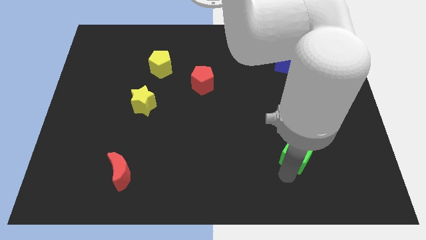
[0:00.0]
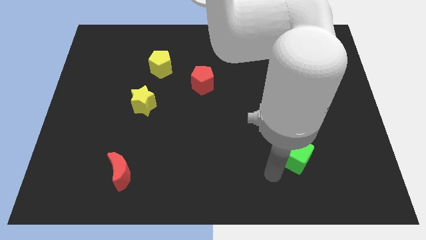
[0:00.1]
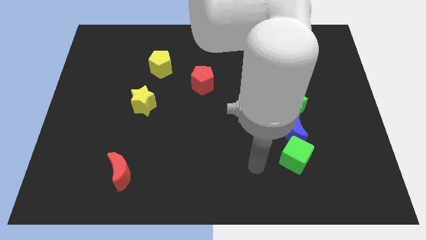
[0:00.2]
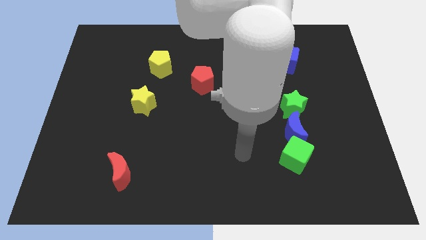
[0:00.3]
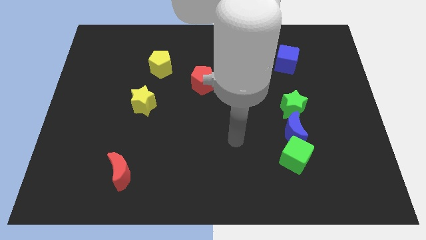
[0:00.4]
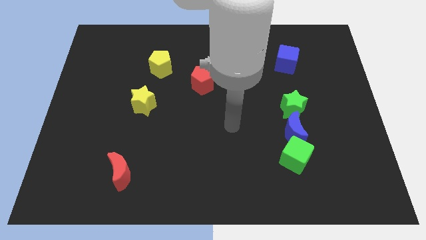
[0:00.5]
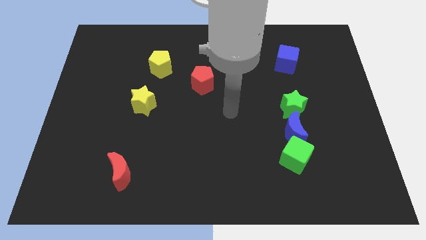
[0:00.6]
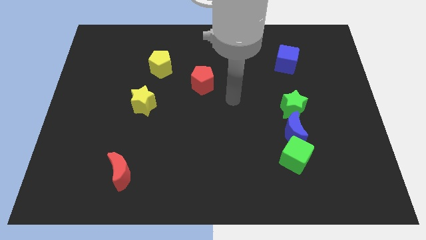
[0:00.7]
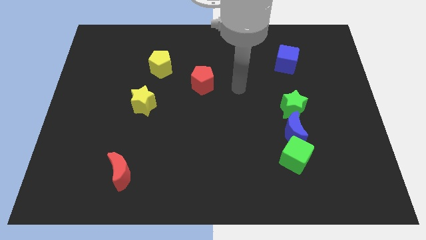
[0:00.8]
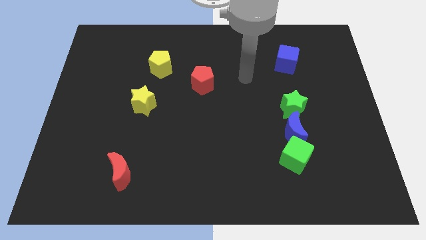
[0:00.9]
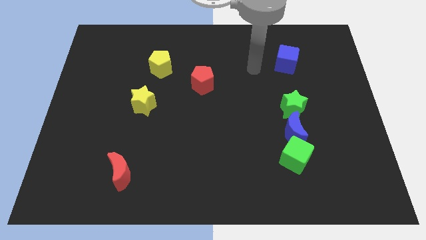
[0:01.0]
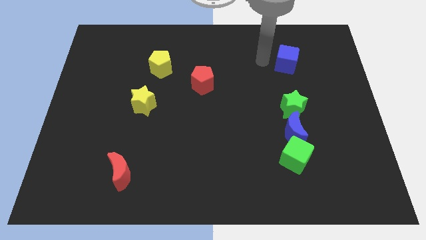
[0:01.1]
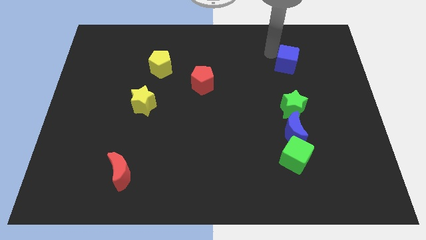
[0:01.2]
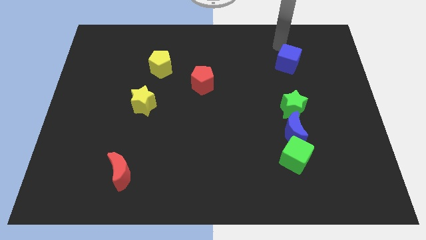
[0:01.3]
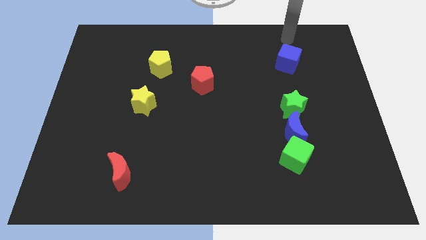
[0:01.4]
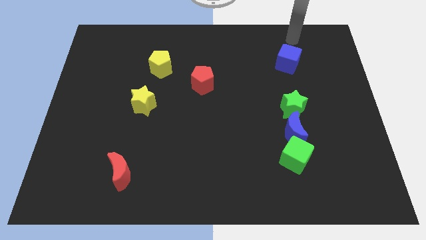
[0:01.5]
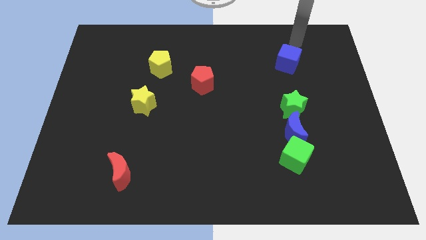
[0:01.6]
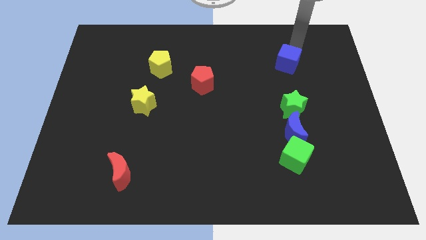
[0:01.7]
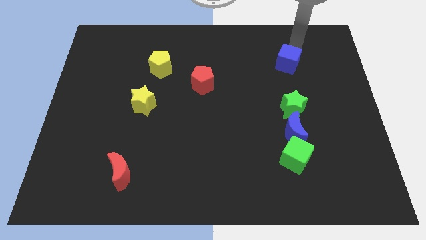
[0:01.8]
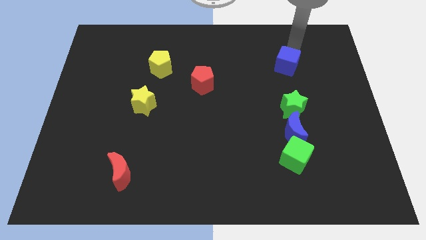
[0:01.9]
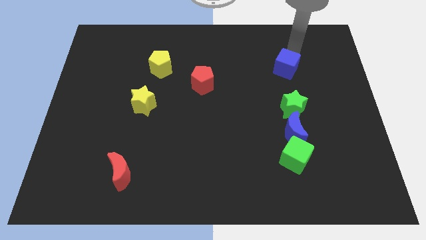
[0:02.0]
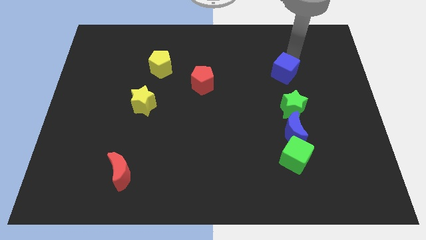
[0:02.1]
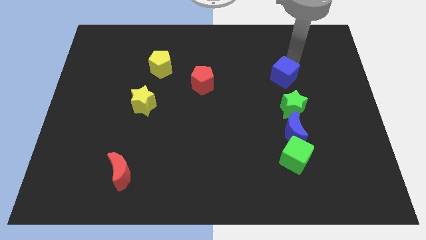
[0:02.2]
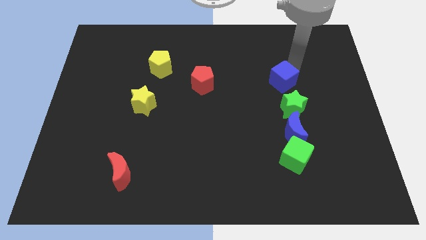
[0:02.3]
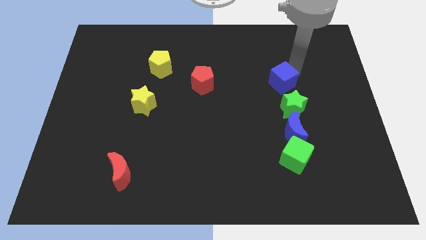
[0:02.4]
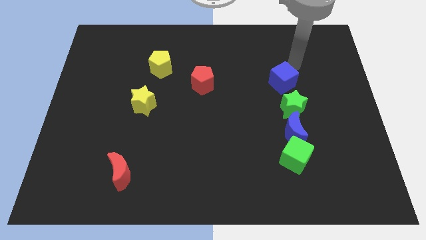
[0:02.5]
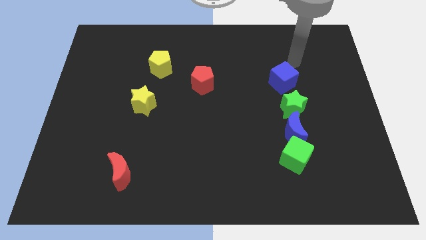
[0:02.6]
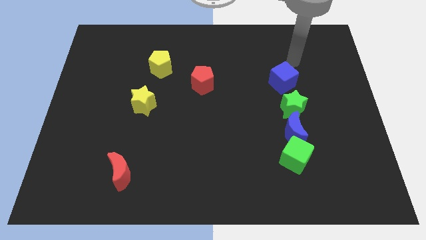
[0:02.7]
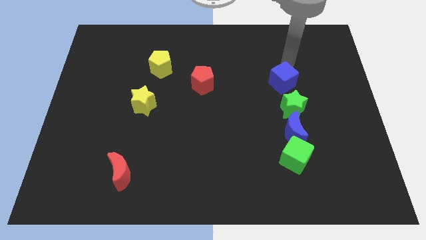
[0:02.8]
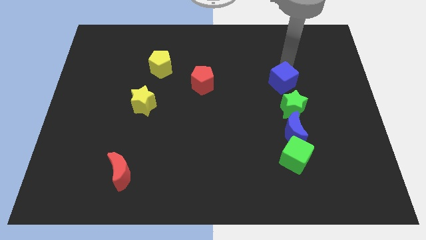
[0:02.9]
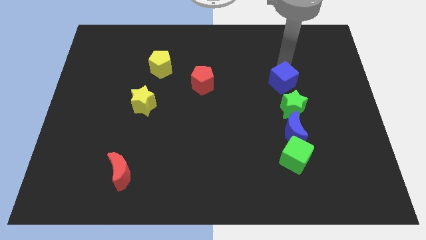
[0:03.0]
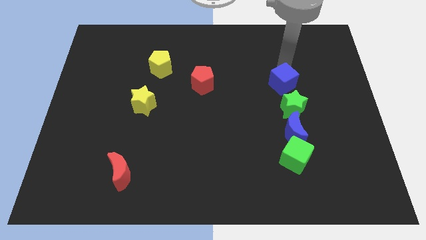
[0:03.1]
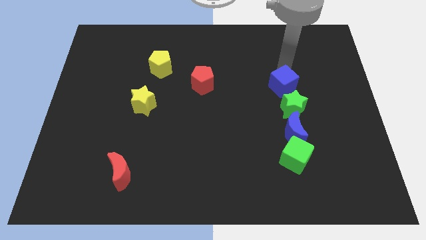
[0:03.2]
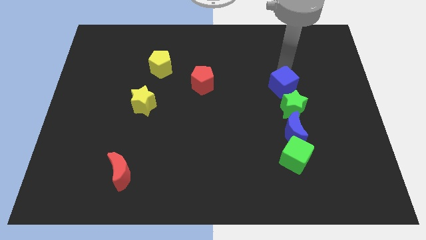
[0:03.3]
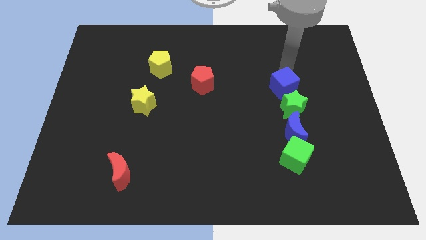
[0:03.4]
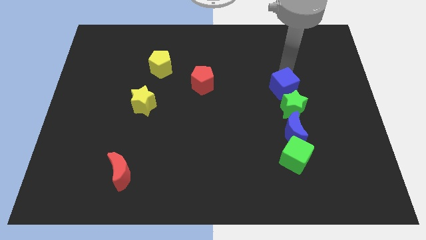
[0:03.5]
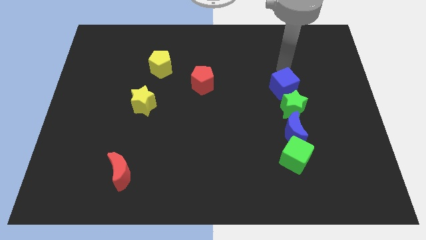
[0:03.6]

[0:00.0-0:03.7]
push blue cube to the top of green star

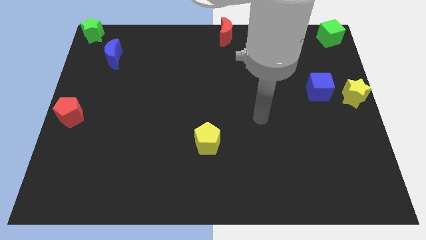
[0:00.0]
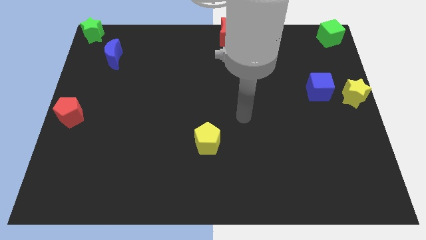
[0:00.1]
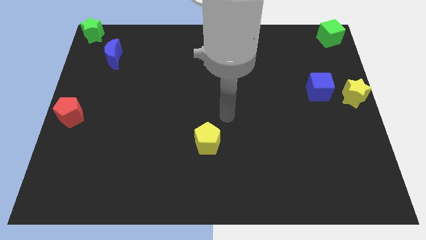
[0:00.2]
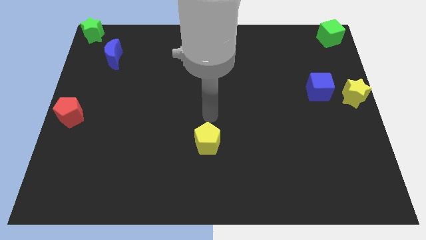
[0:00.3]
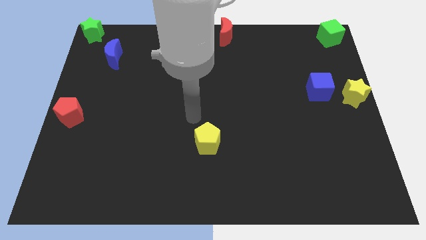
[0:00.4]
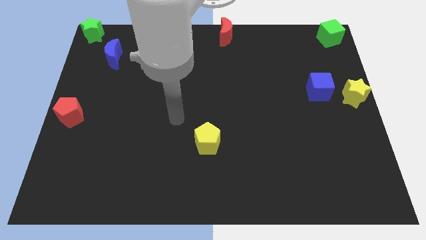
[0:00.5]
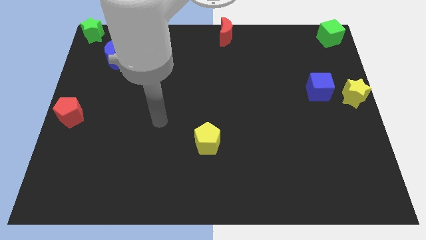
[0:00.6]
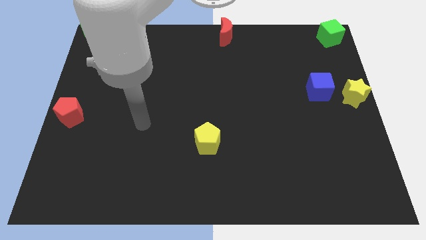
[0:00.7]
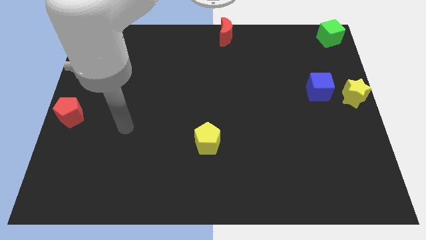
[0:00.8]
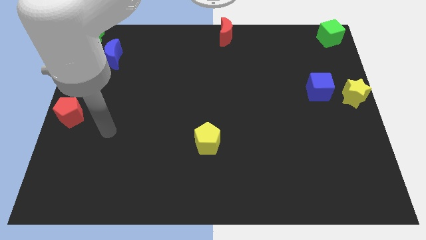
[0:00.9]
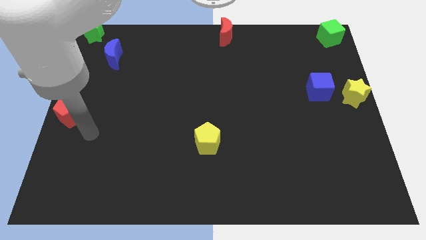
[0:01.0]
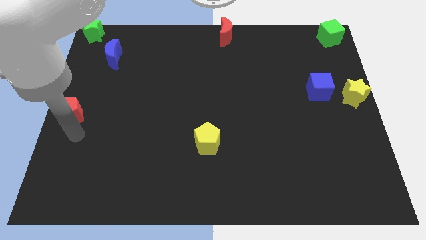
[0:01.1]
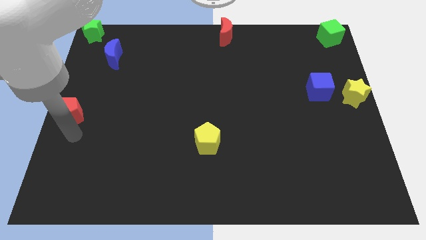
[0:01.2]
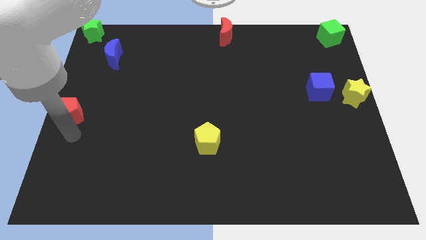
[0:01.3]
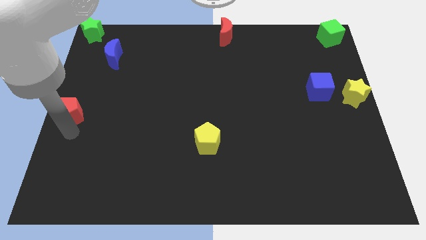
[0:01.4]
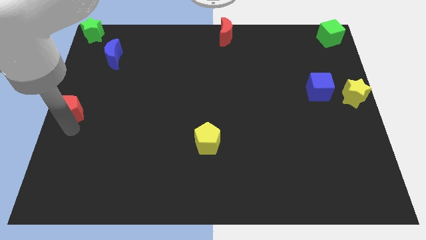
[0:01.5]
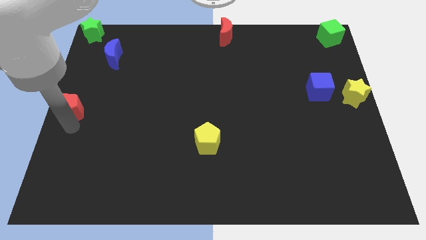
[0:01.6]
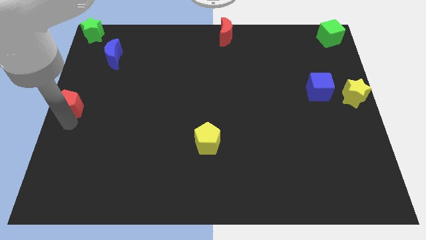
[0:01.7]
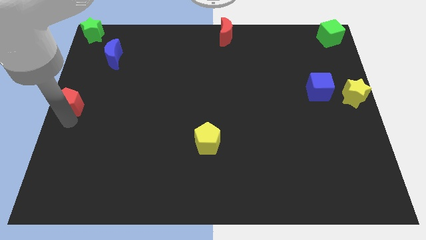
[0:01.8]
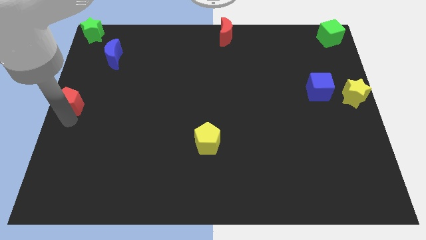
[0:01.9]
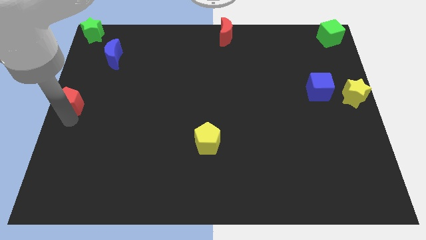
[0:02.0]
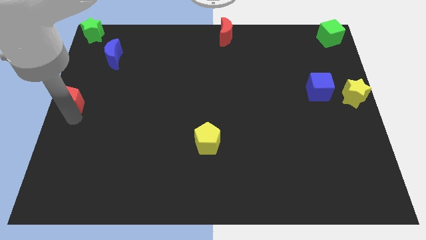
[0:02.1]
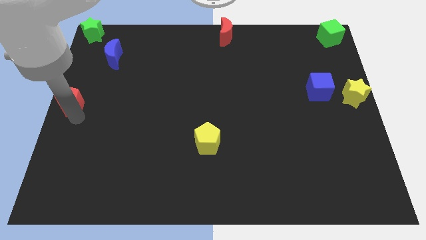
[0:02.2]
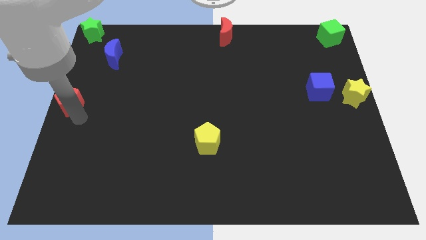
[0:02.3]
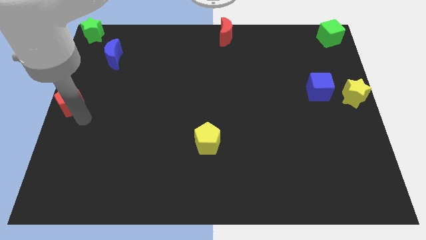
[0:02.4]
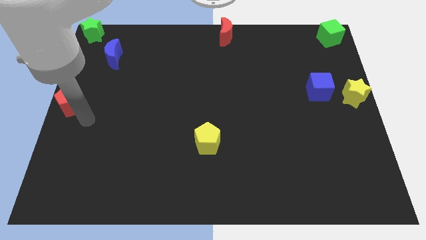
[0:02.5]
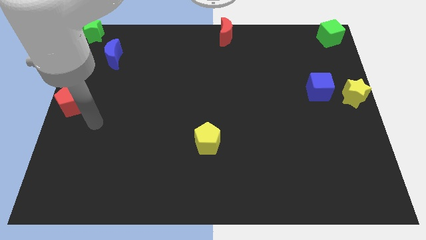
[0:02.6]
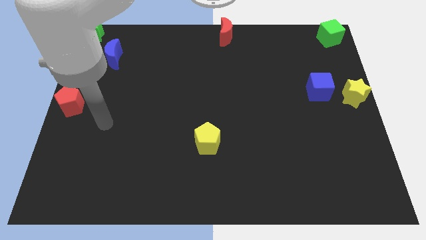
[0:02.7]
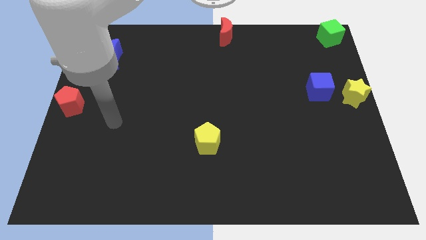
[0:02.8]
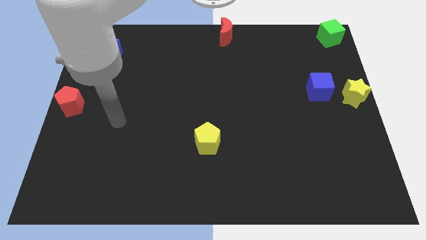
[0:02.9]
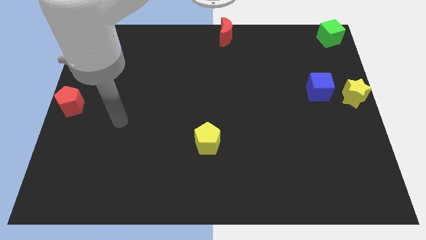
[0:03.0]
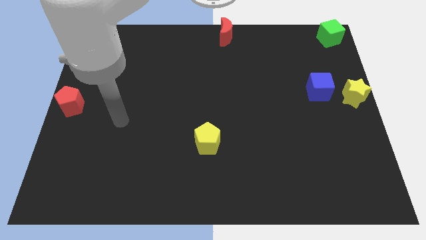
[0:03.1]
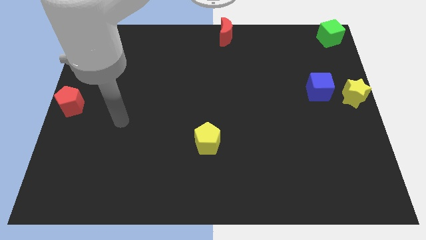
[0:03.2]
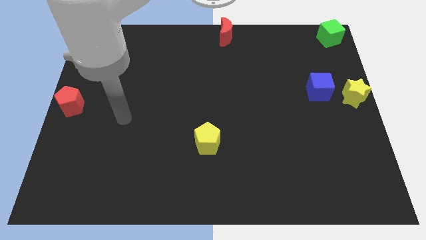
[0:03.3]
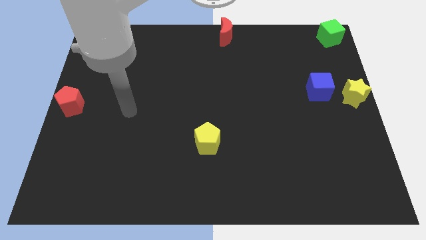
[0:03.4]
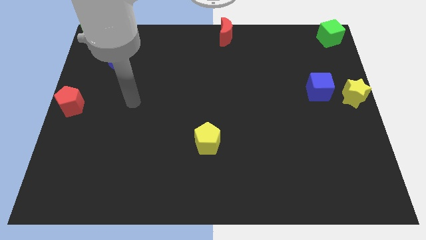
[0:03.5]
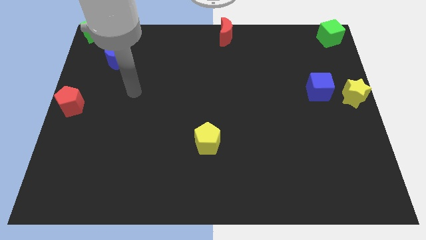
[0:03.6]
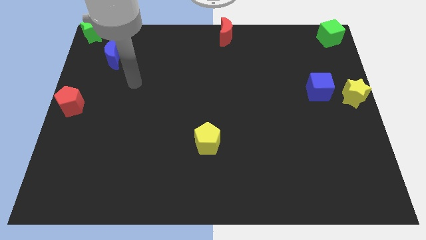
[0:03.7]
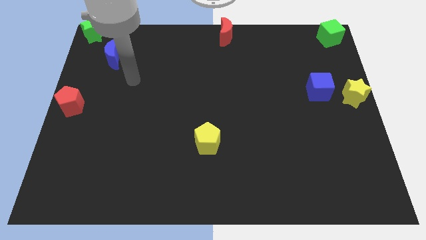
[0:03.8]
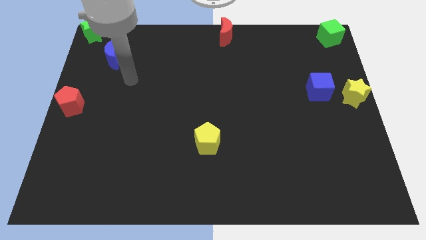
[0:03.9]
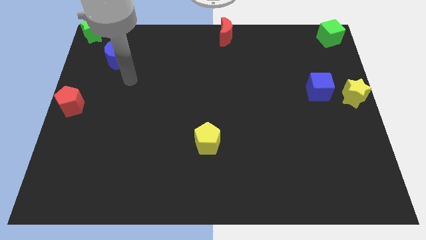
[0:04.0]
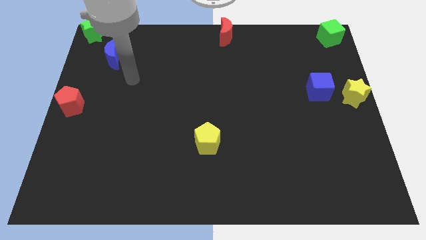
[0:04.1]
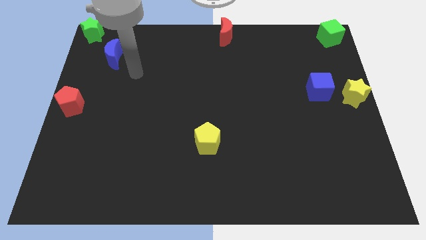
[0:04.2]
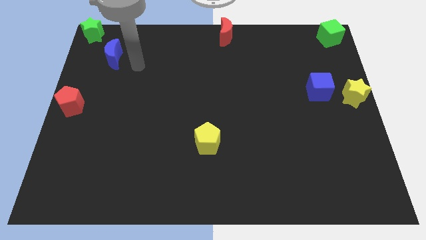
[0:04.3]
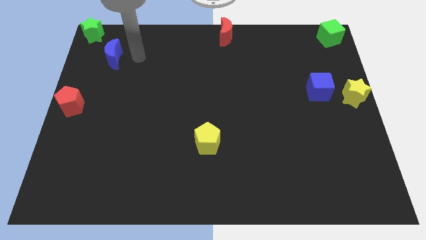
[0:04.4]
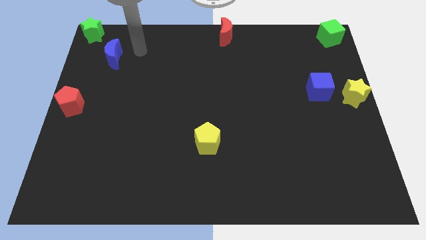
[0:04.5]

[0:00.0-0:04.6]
slightly push red pentagon to the left center of the board

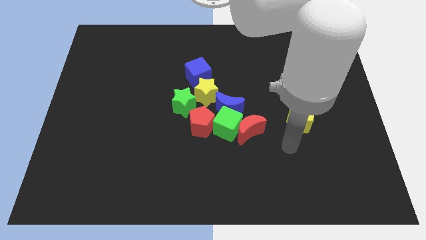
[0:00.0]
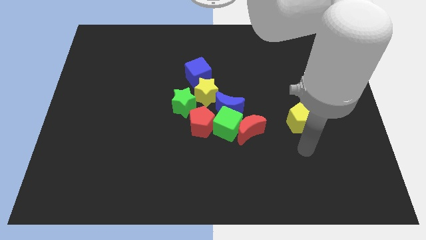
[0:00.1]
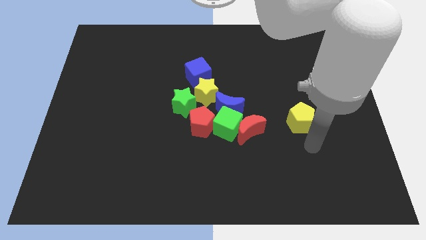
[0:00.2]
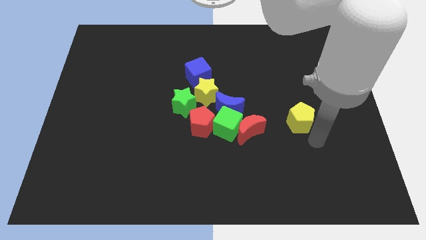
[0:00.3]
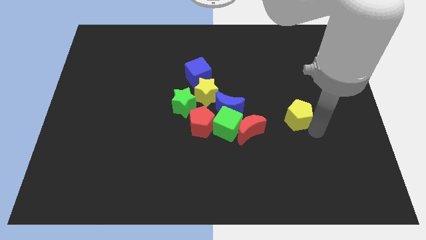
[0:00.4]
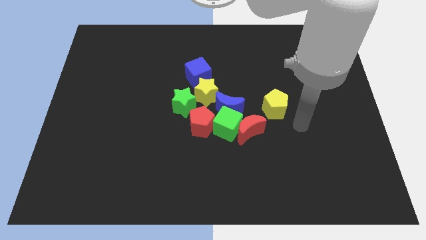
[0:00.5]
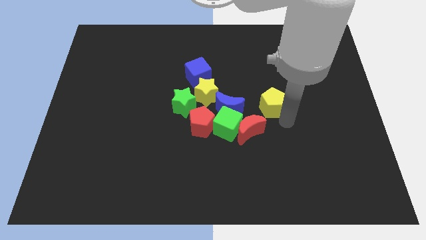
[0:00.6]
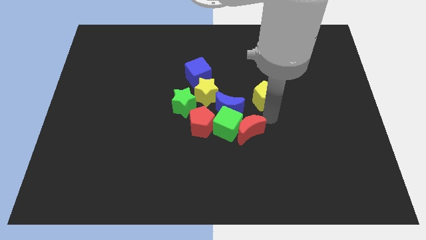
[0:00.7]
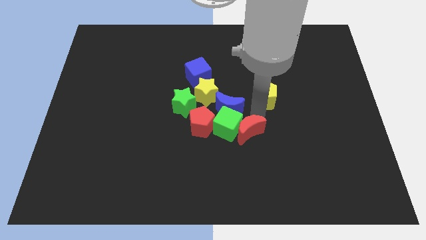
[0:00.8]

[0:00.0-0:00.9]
push the yellow pentagon towards up
